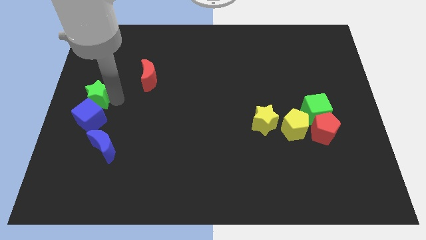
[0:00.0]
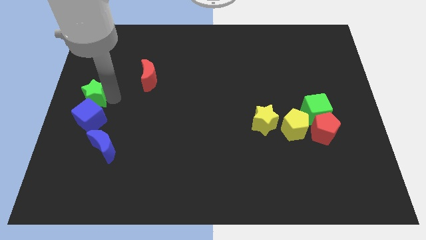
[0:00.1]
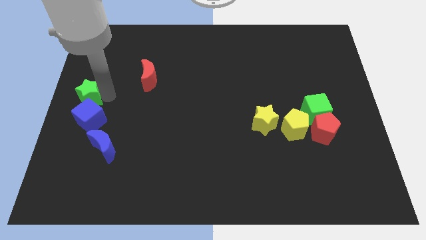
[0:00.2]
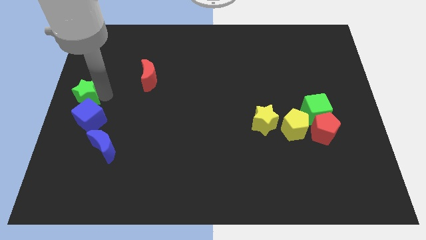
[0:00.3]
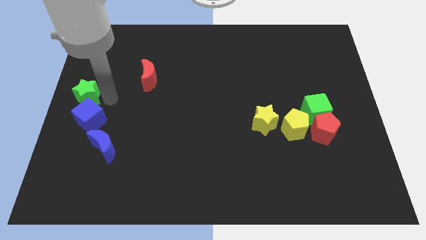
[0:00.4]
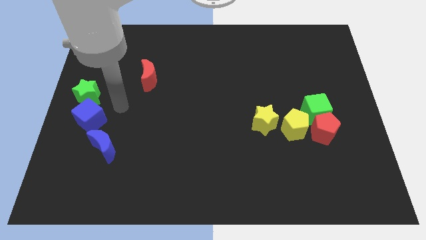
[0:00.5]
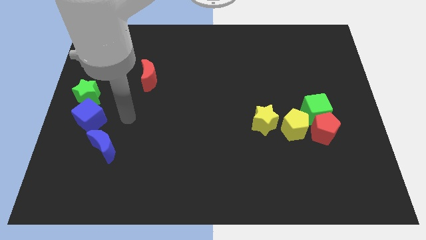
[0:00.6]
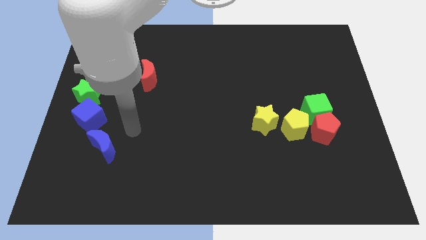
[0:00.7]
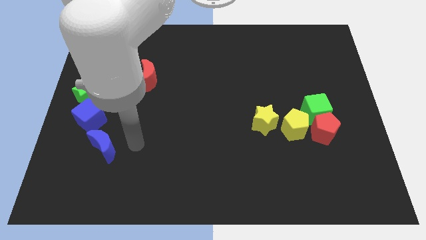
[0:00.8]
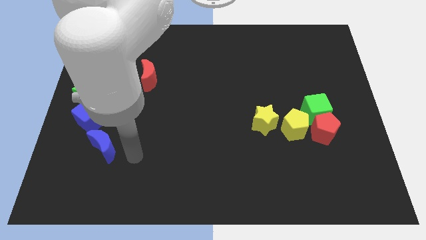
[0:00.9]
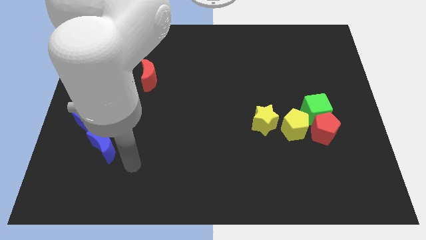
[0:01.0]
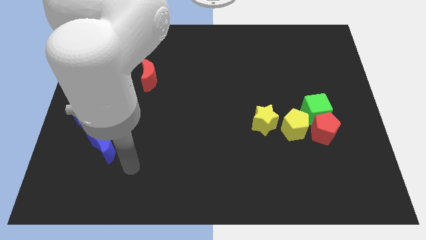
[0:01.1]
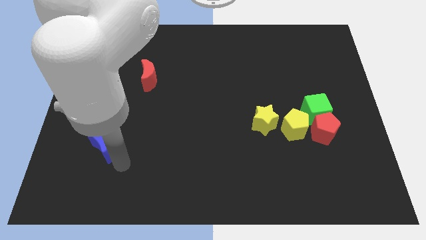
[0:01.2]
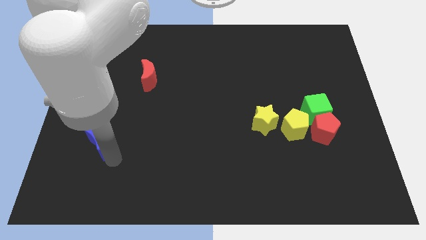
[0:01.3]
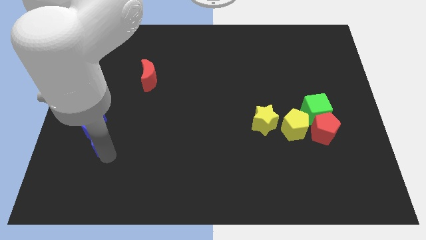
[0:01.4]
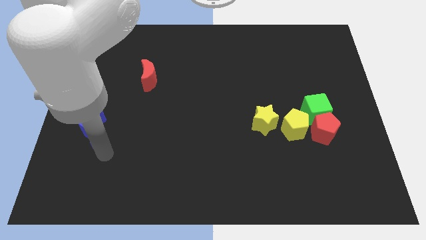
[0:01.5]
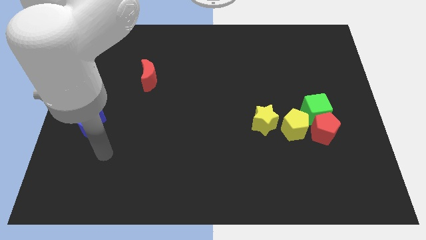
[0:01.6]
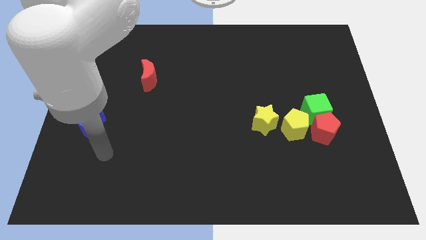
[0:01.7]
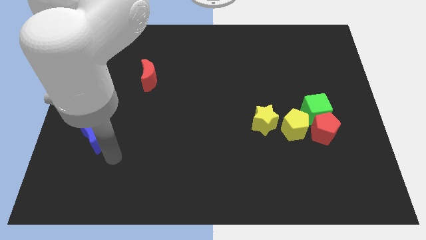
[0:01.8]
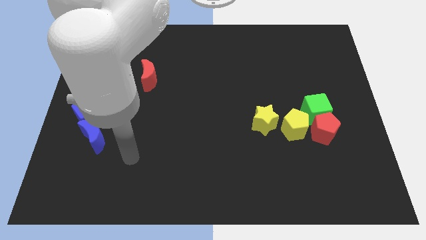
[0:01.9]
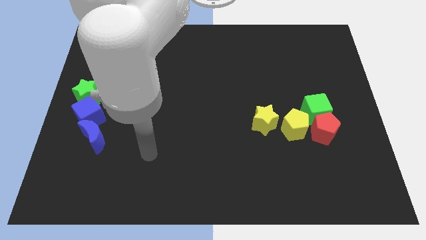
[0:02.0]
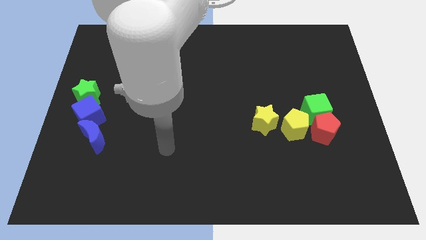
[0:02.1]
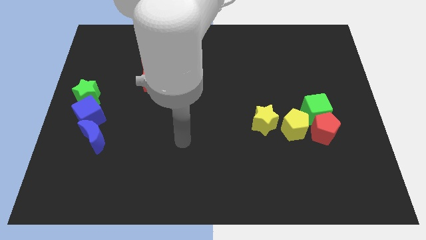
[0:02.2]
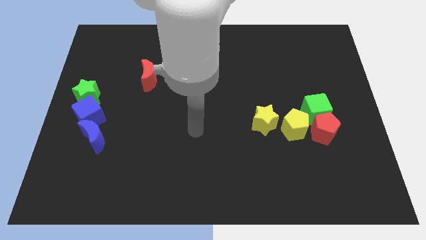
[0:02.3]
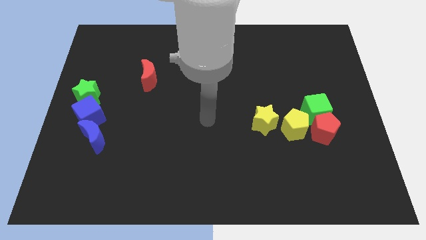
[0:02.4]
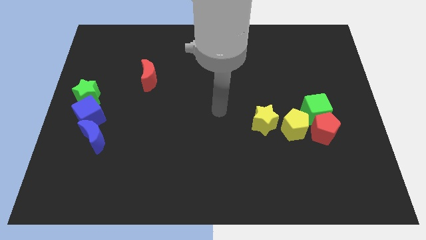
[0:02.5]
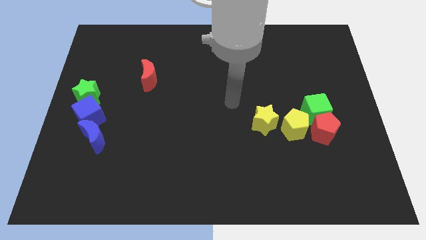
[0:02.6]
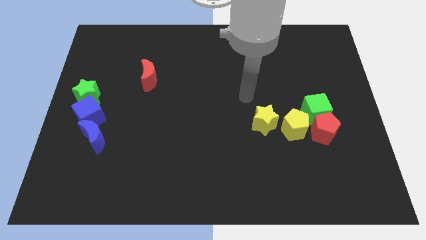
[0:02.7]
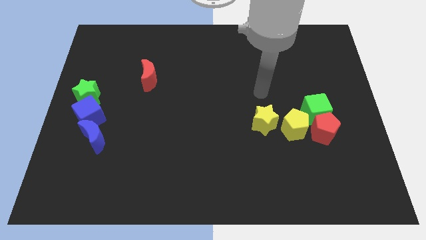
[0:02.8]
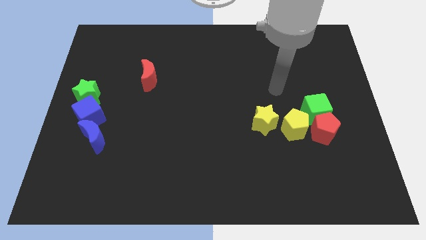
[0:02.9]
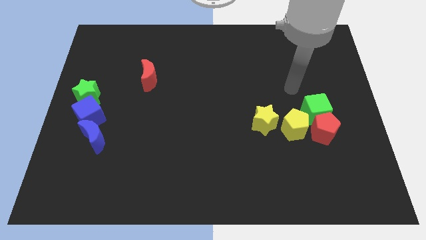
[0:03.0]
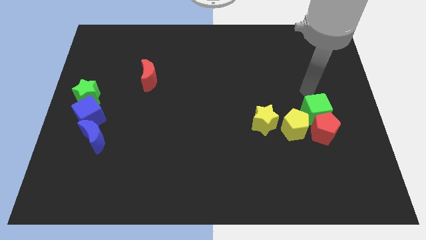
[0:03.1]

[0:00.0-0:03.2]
push the blue moon into the blue cube

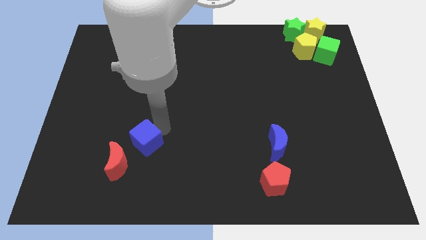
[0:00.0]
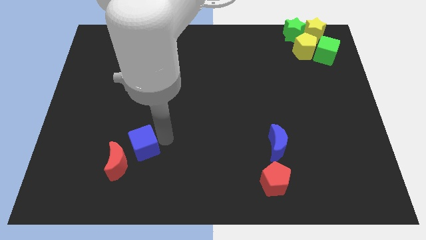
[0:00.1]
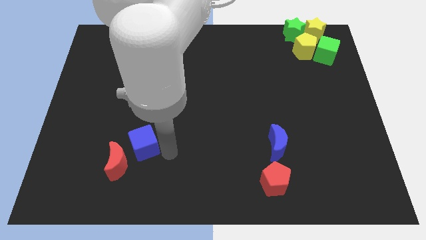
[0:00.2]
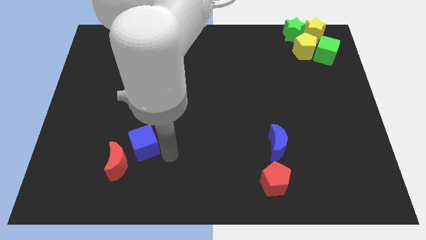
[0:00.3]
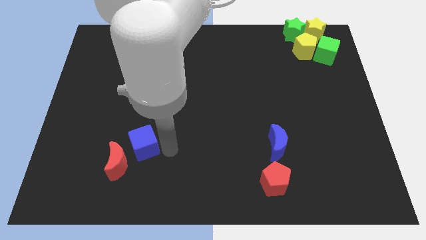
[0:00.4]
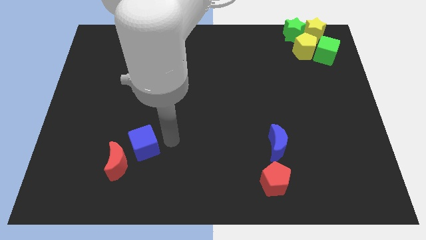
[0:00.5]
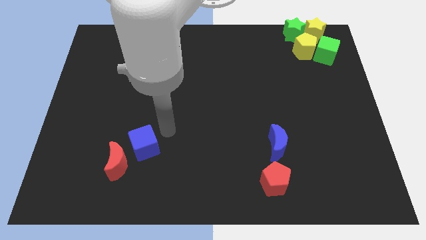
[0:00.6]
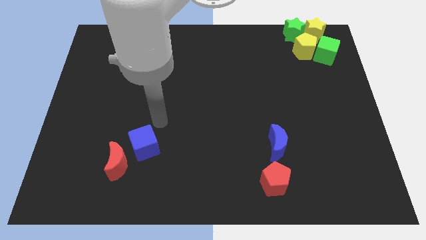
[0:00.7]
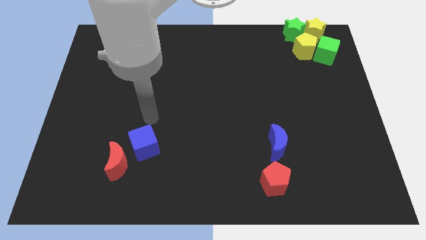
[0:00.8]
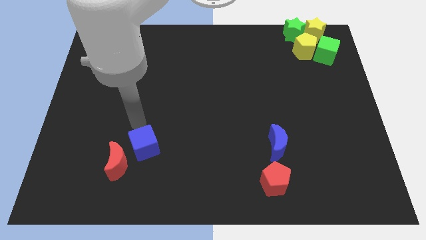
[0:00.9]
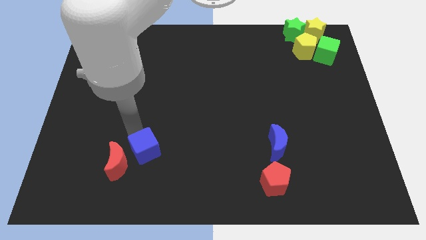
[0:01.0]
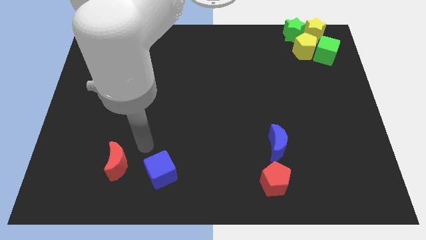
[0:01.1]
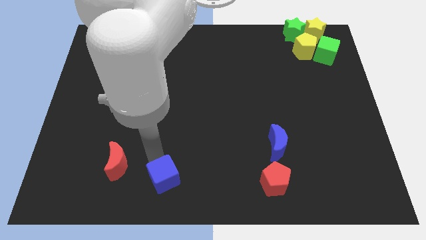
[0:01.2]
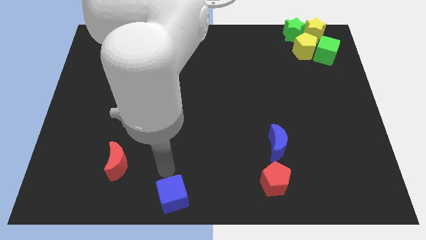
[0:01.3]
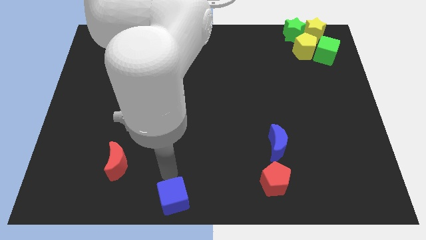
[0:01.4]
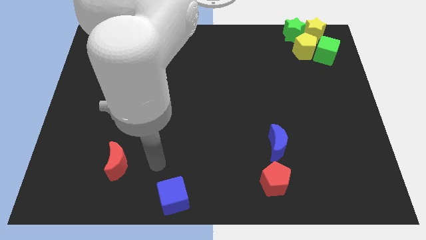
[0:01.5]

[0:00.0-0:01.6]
push blue cube to the bottom side of the board

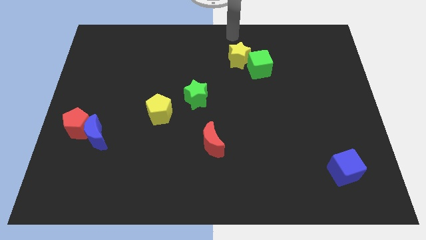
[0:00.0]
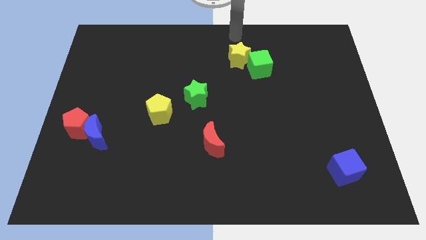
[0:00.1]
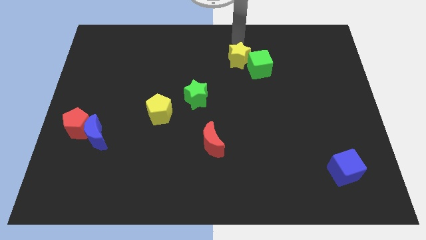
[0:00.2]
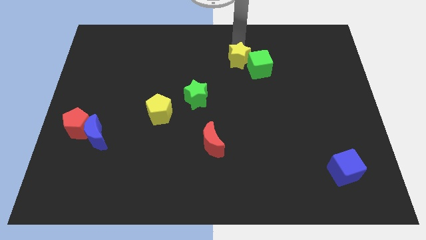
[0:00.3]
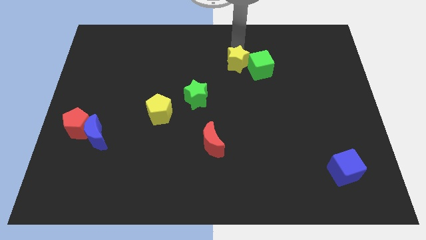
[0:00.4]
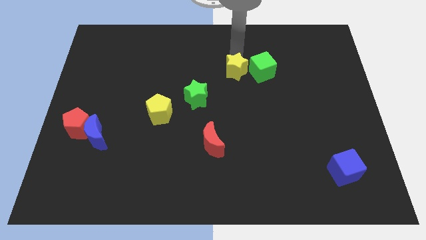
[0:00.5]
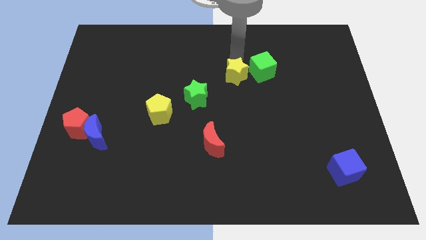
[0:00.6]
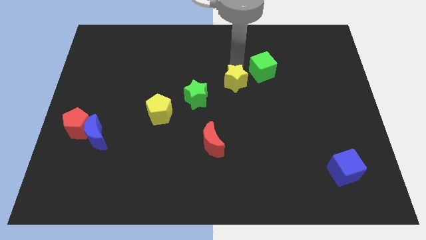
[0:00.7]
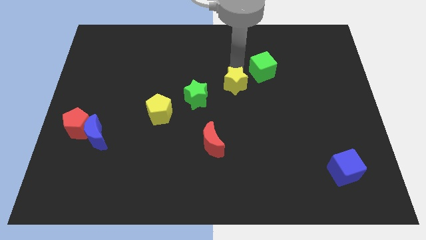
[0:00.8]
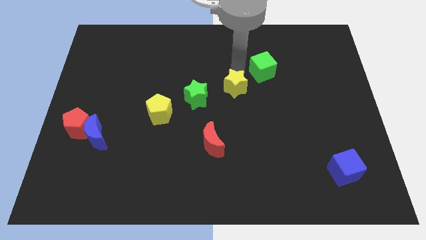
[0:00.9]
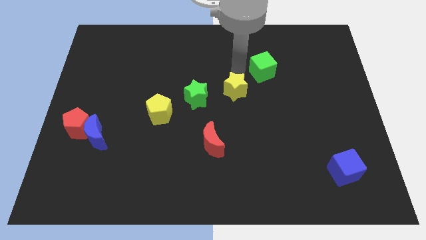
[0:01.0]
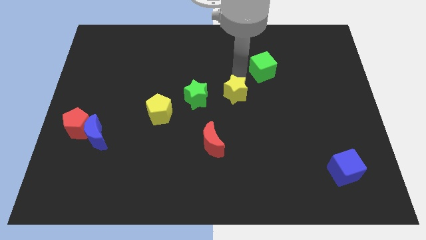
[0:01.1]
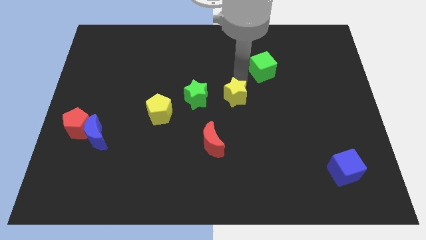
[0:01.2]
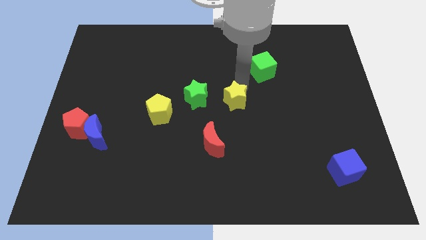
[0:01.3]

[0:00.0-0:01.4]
place the yellow star to the right of the green star

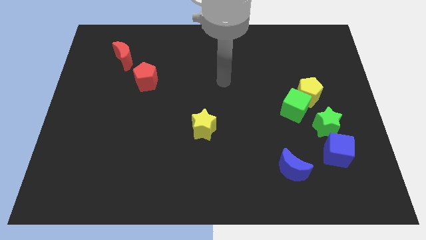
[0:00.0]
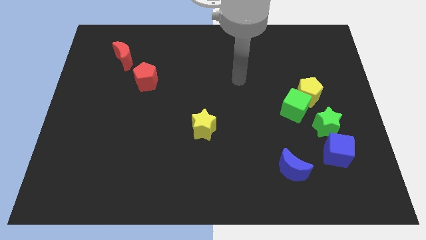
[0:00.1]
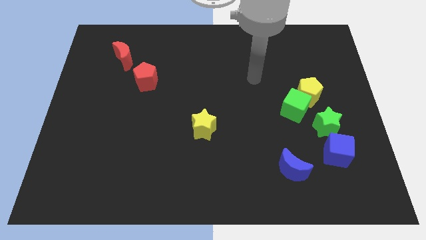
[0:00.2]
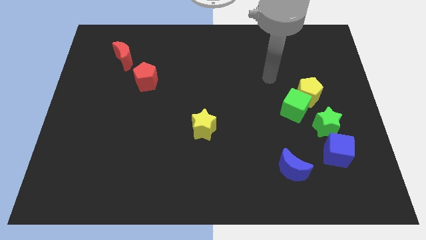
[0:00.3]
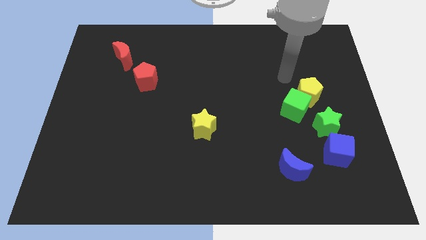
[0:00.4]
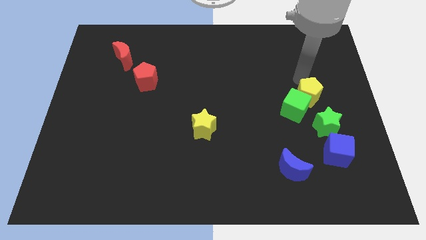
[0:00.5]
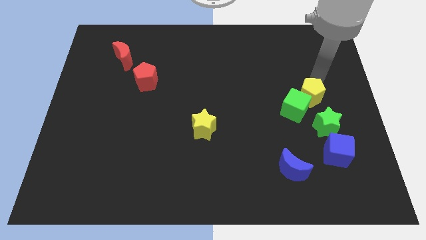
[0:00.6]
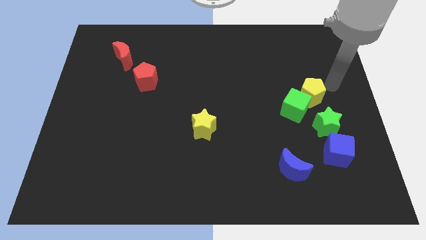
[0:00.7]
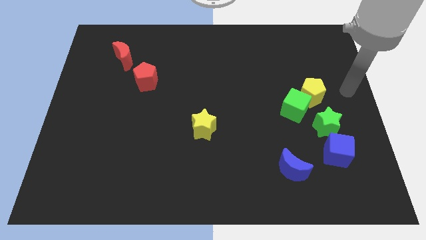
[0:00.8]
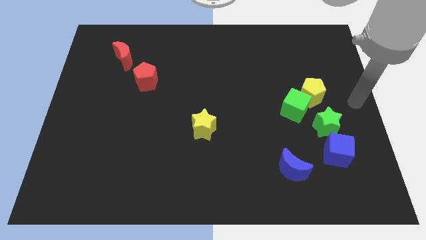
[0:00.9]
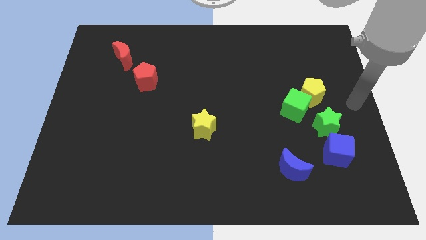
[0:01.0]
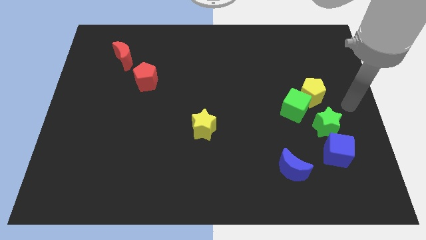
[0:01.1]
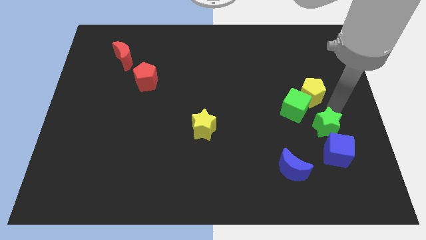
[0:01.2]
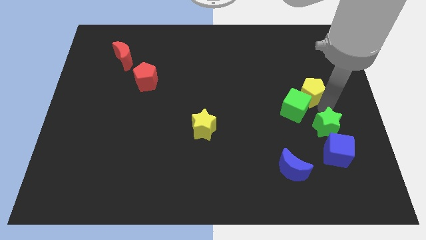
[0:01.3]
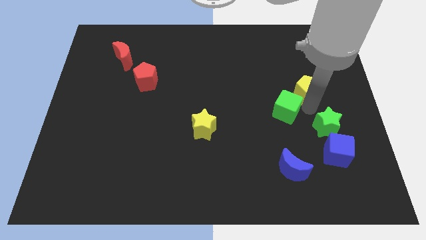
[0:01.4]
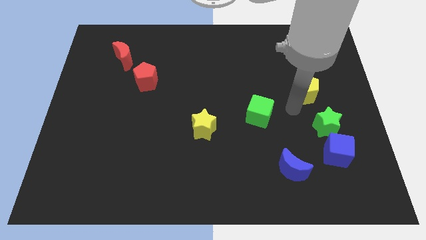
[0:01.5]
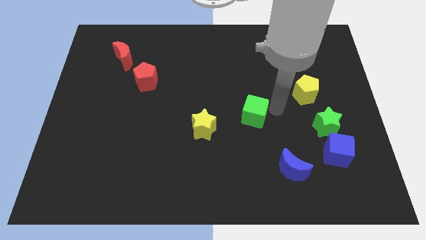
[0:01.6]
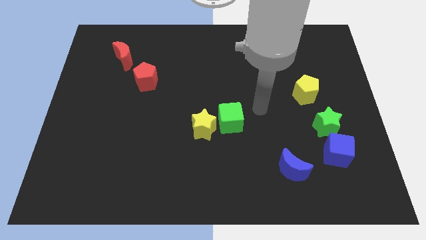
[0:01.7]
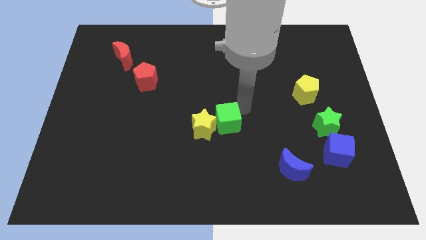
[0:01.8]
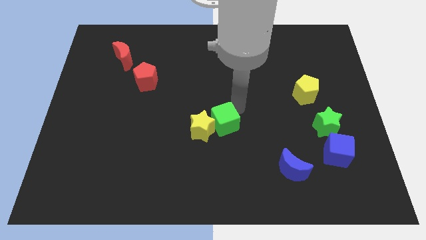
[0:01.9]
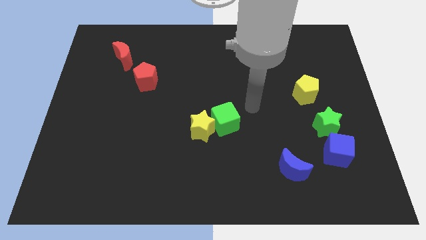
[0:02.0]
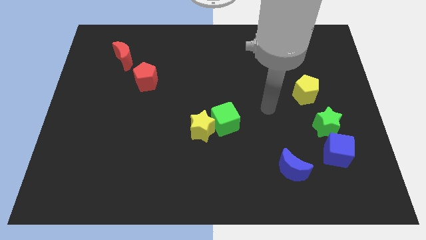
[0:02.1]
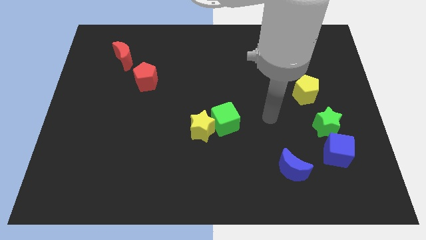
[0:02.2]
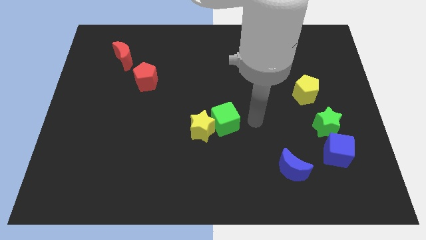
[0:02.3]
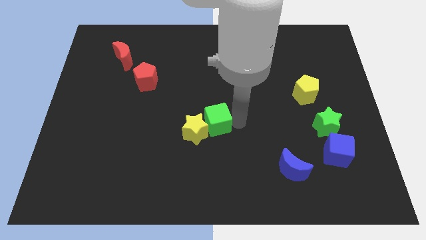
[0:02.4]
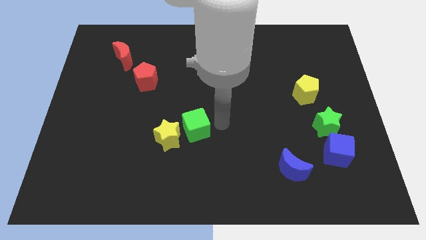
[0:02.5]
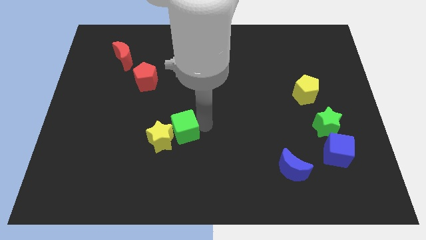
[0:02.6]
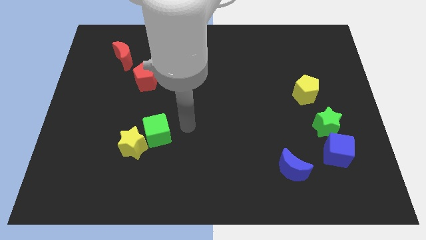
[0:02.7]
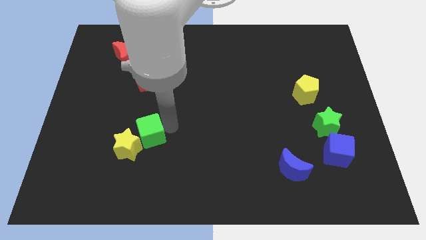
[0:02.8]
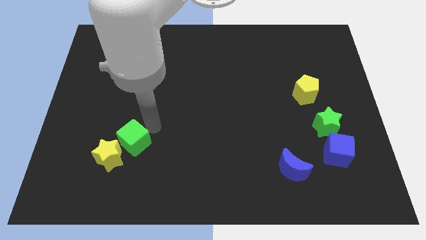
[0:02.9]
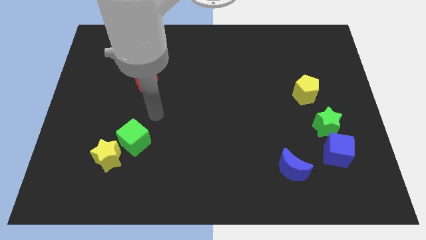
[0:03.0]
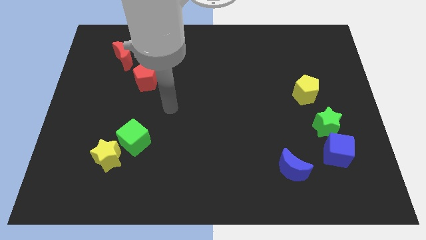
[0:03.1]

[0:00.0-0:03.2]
push the green cube and yellow star to the bottom side of the red pentagon
